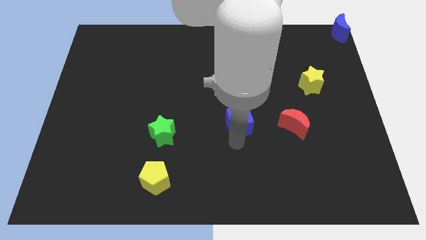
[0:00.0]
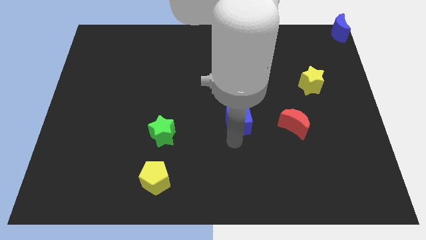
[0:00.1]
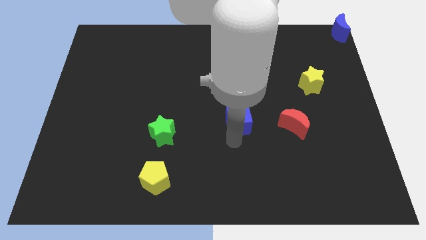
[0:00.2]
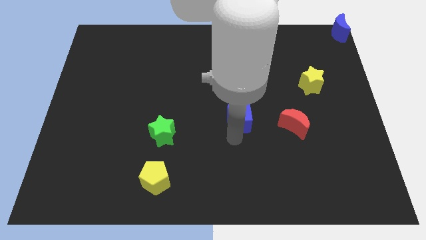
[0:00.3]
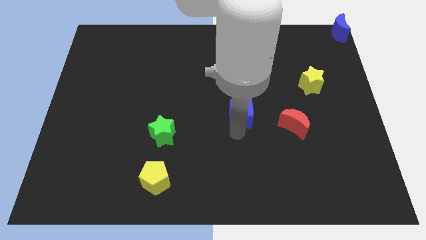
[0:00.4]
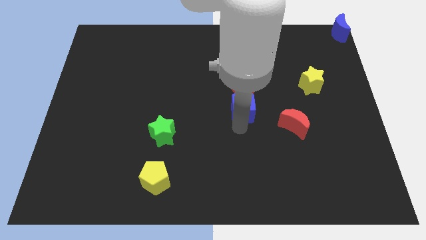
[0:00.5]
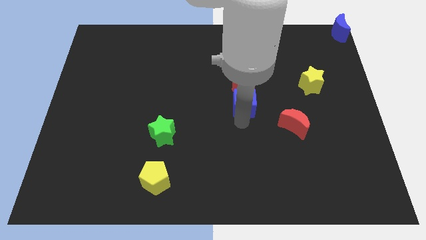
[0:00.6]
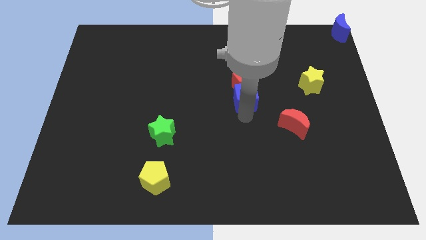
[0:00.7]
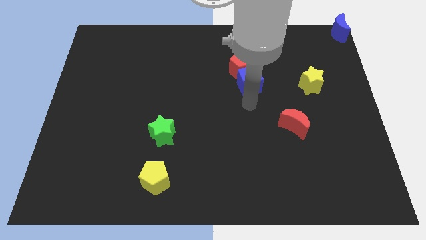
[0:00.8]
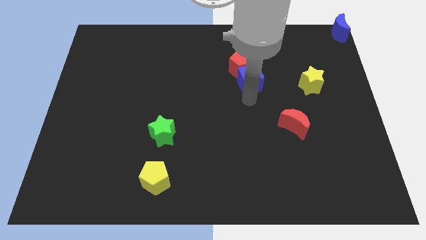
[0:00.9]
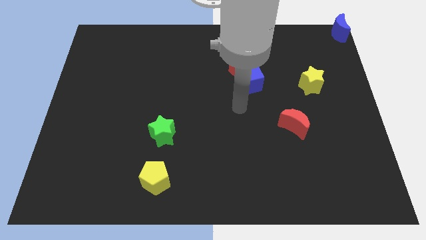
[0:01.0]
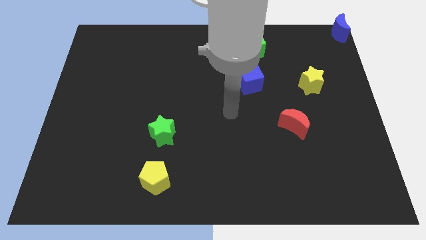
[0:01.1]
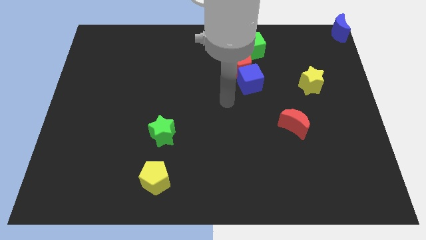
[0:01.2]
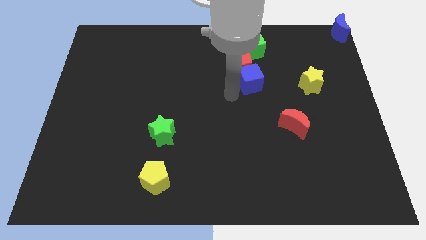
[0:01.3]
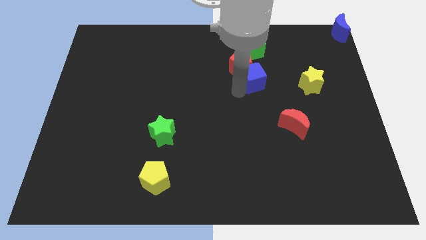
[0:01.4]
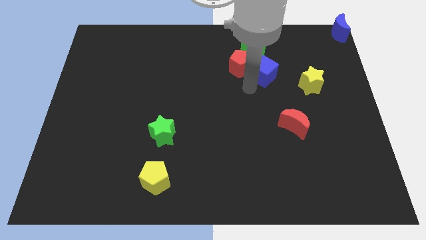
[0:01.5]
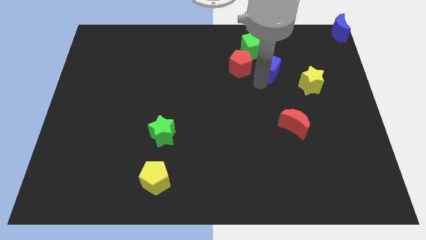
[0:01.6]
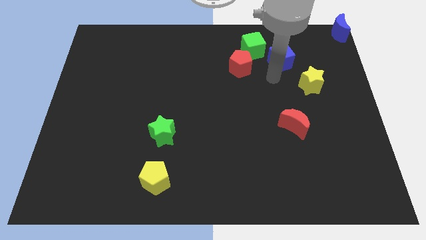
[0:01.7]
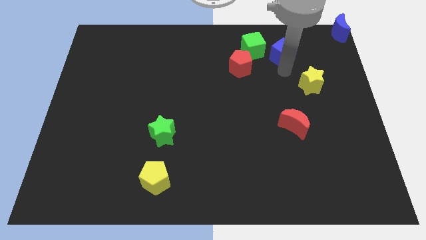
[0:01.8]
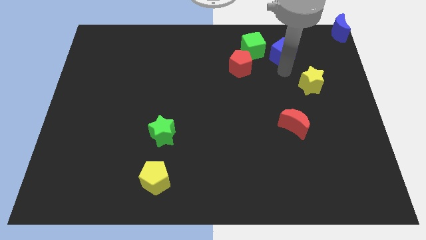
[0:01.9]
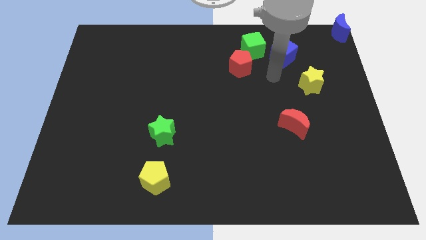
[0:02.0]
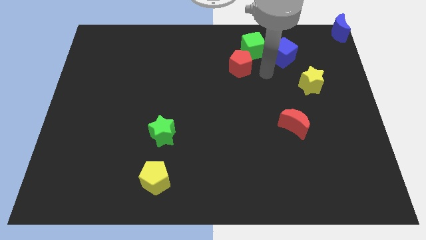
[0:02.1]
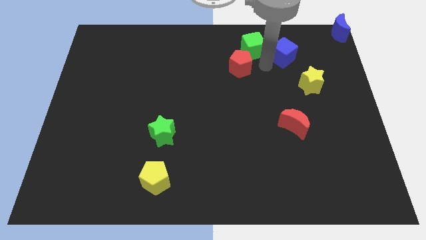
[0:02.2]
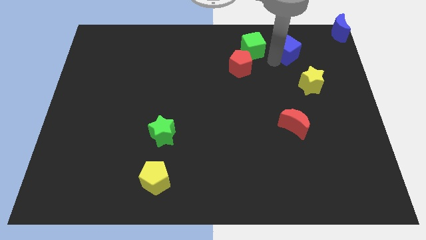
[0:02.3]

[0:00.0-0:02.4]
move the blue cube towards blue crescent

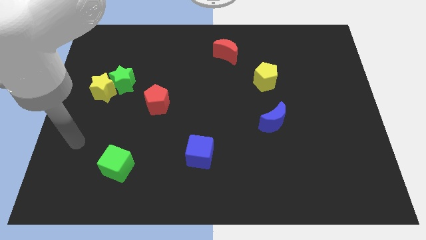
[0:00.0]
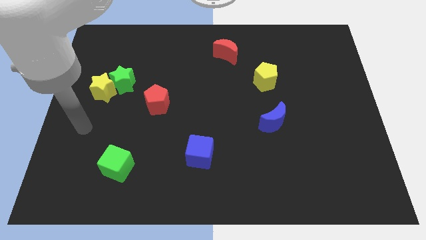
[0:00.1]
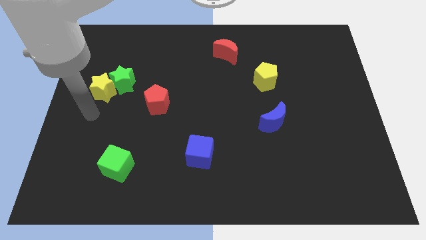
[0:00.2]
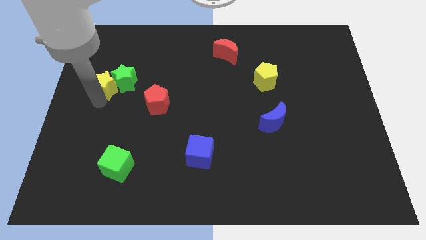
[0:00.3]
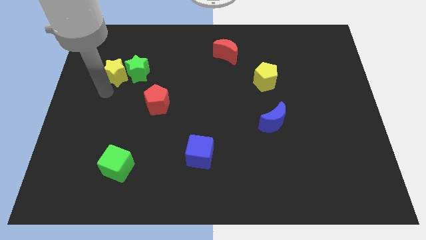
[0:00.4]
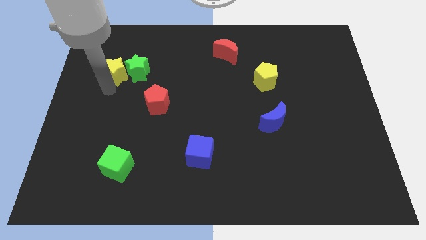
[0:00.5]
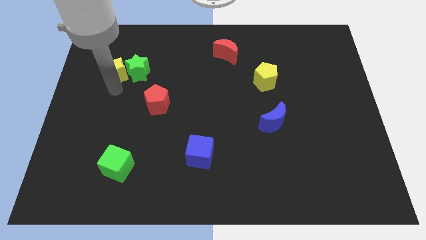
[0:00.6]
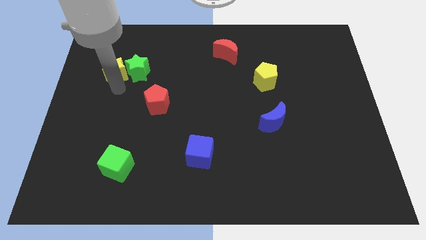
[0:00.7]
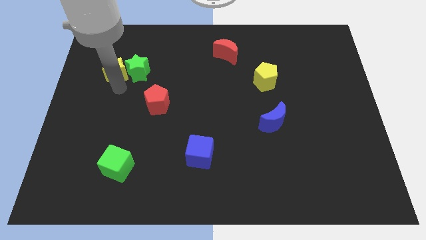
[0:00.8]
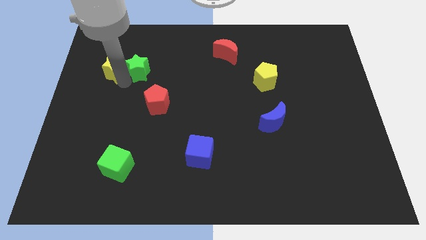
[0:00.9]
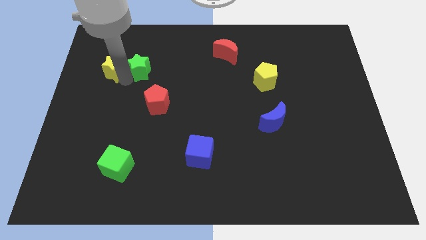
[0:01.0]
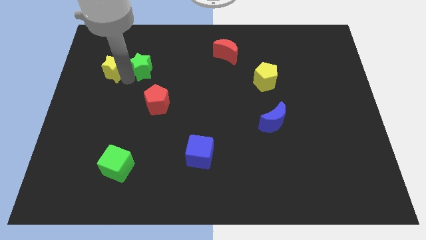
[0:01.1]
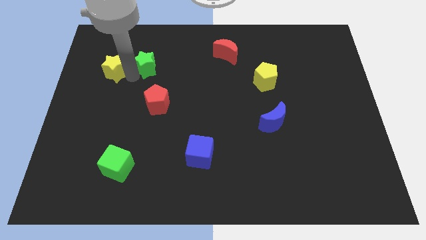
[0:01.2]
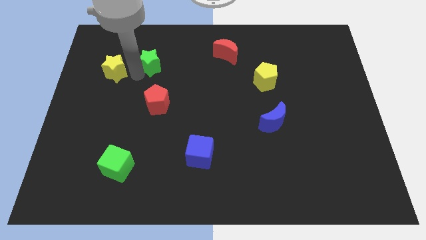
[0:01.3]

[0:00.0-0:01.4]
separate the green star from the yellow star

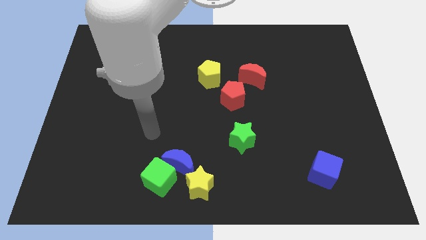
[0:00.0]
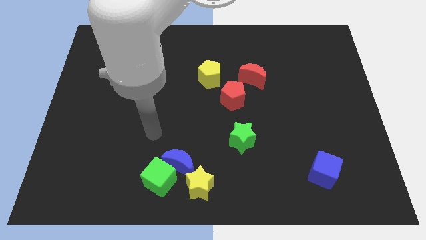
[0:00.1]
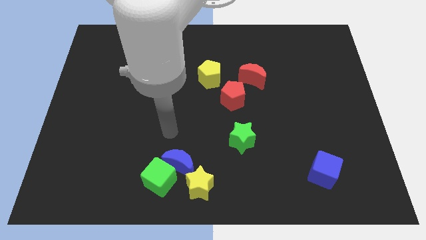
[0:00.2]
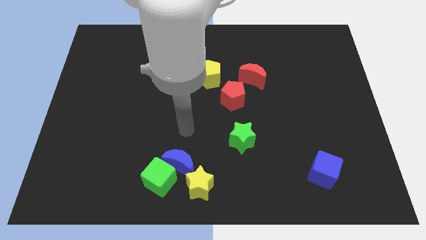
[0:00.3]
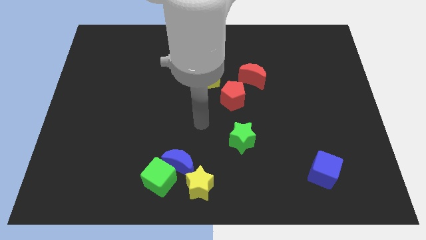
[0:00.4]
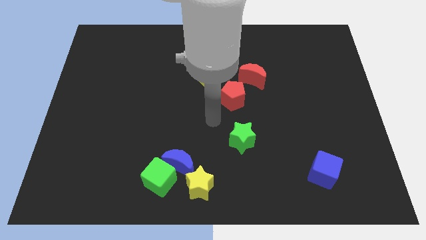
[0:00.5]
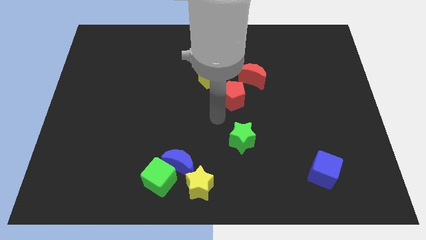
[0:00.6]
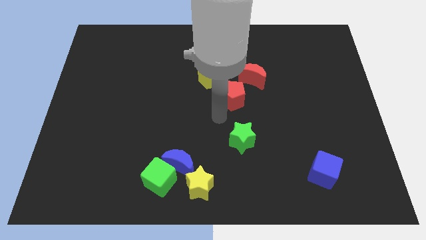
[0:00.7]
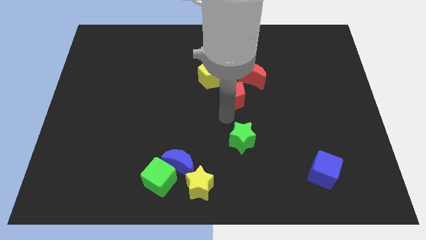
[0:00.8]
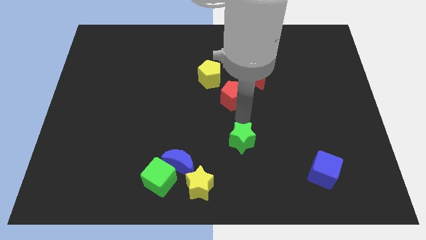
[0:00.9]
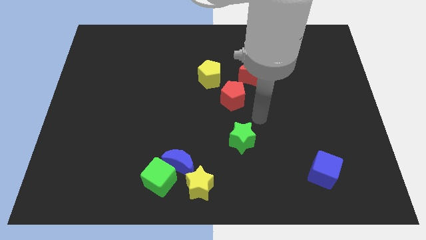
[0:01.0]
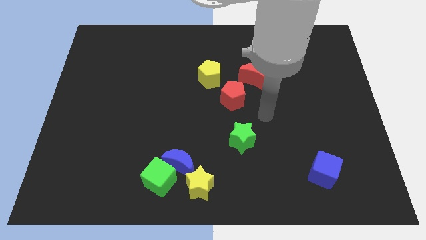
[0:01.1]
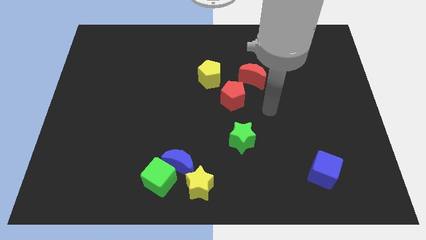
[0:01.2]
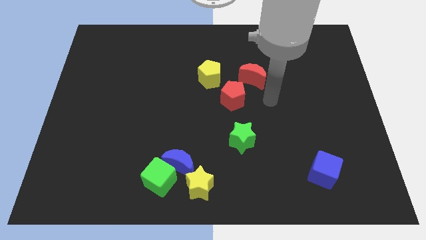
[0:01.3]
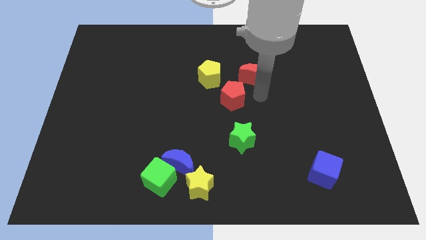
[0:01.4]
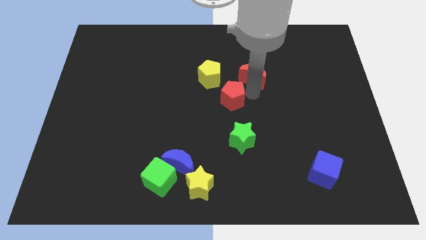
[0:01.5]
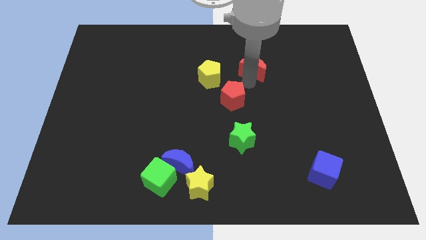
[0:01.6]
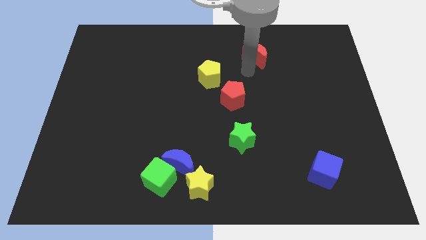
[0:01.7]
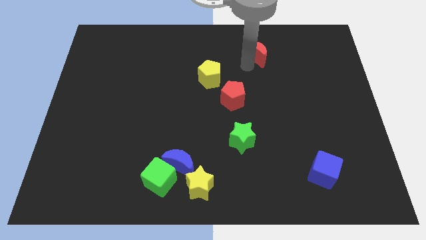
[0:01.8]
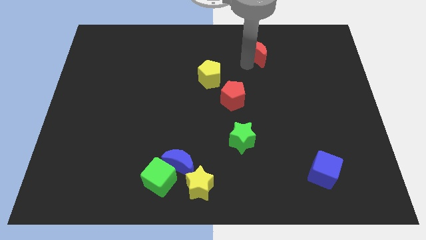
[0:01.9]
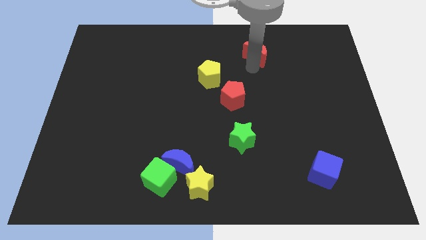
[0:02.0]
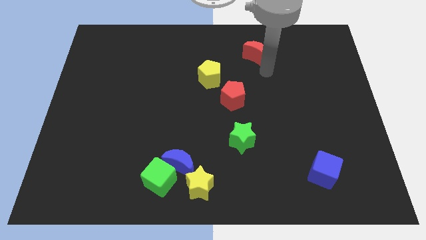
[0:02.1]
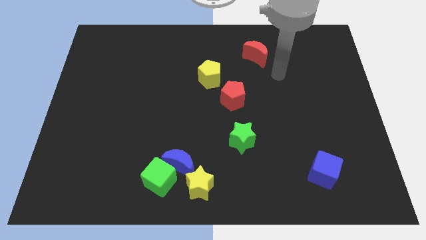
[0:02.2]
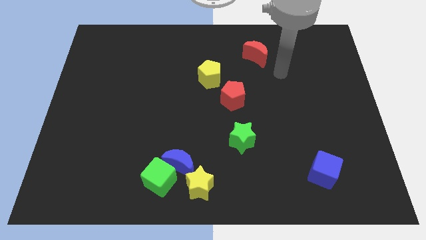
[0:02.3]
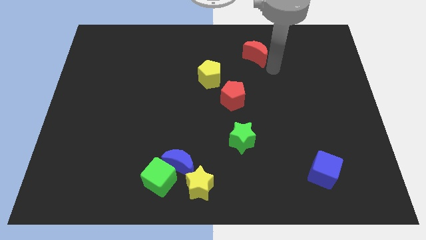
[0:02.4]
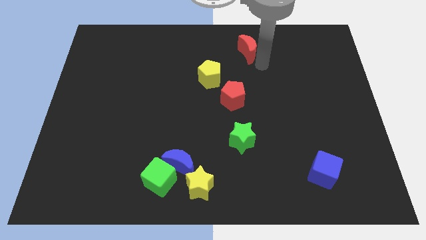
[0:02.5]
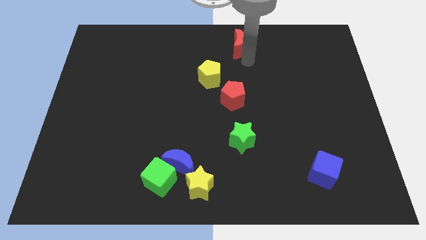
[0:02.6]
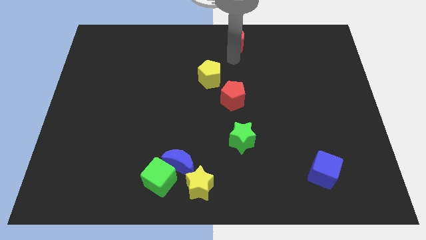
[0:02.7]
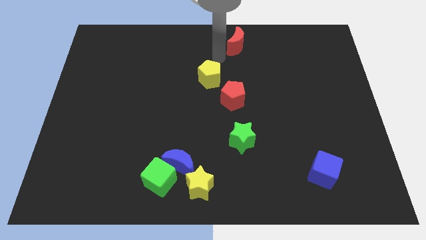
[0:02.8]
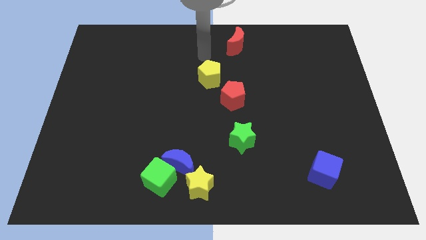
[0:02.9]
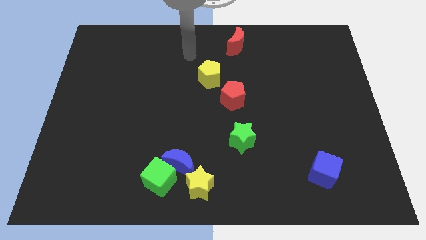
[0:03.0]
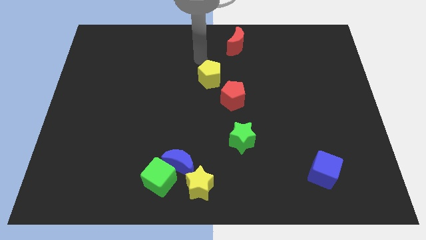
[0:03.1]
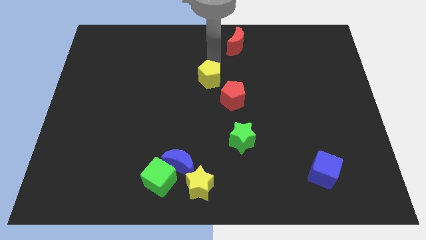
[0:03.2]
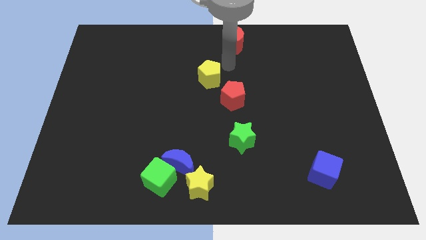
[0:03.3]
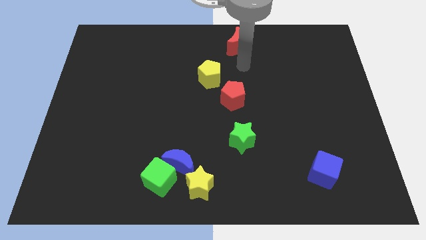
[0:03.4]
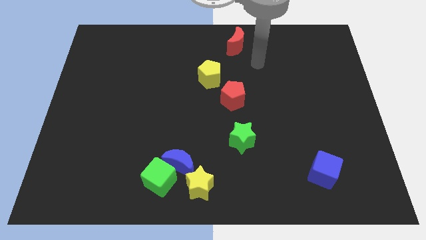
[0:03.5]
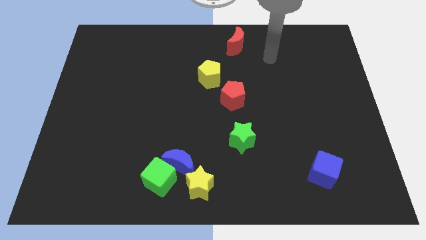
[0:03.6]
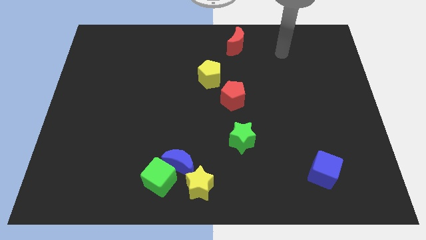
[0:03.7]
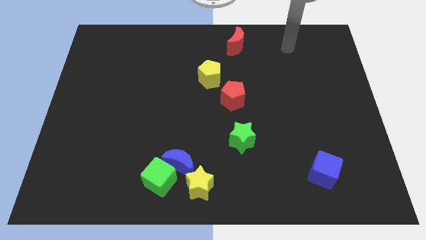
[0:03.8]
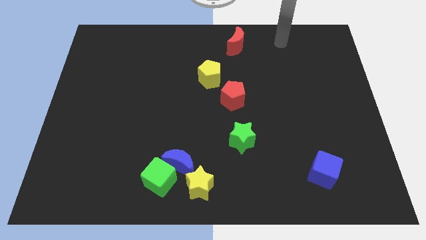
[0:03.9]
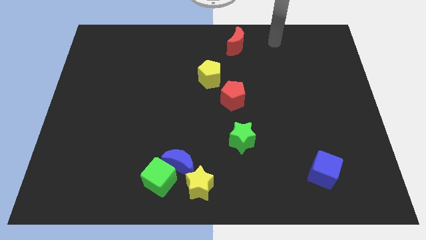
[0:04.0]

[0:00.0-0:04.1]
push the red moon to the vertical top of the red pentagon

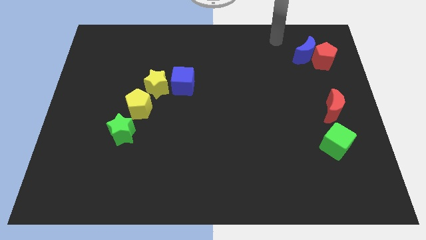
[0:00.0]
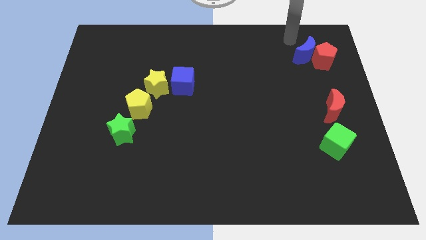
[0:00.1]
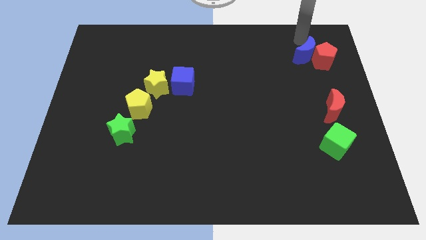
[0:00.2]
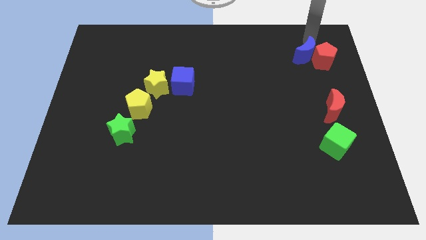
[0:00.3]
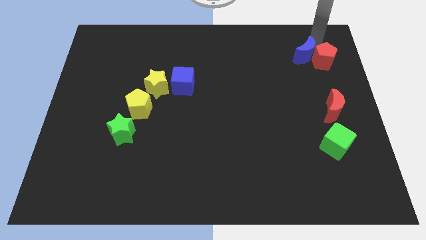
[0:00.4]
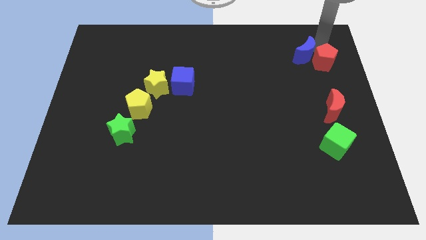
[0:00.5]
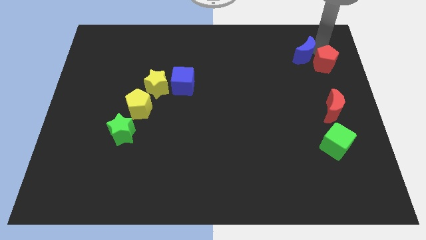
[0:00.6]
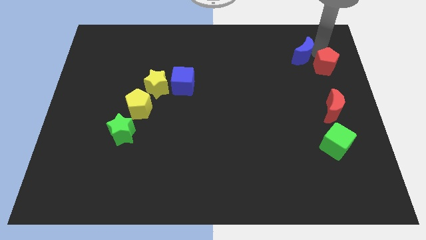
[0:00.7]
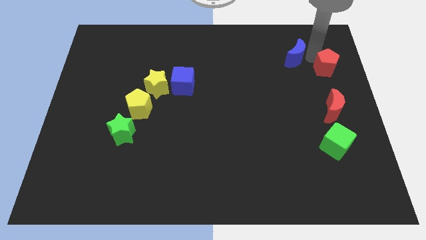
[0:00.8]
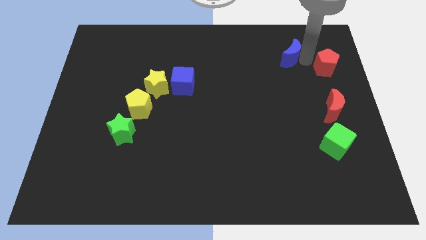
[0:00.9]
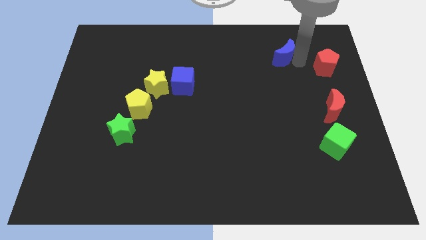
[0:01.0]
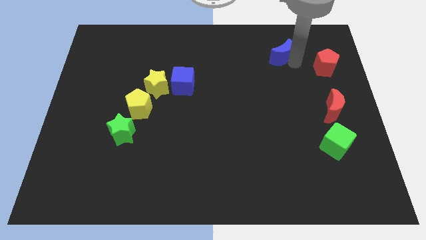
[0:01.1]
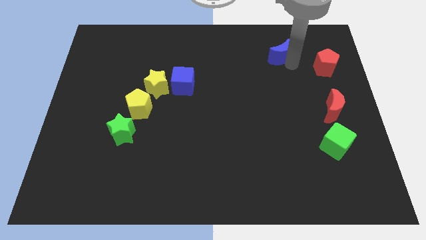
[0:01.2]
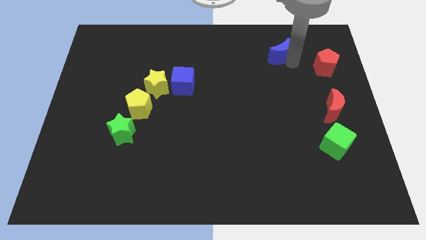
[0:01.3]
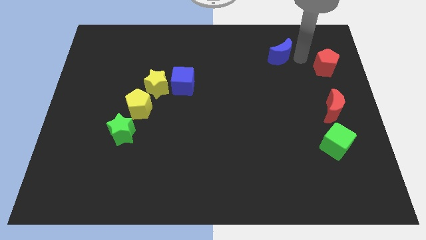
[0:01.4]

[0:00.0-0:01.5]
separate the blue crescent from red pentagon
